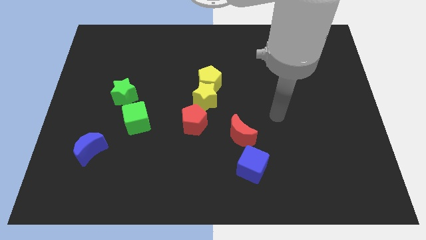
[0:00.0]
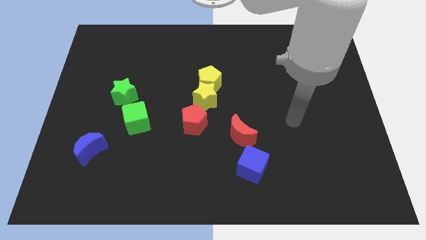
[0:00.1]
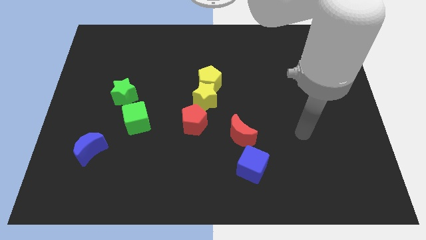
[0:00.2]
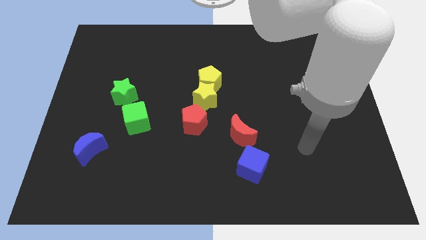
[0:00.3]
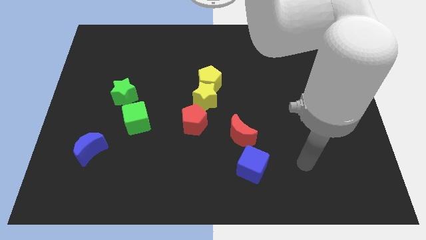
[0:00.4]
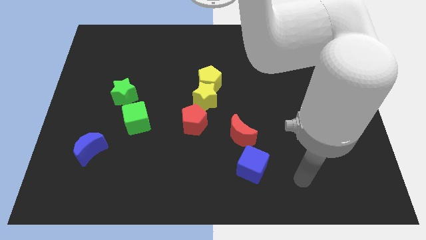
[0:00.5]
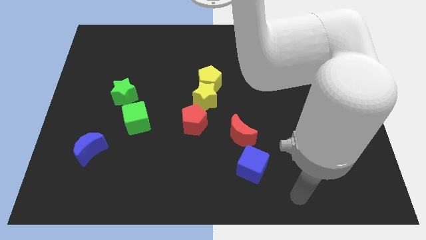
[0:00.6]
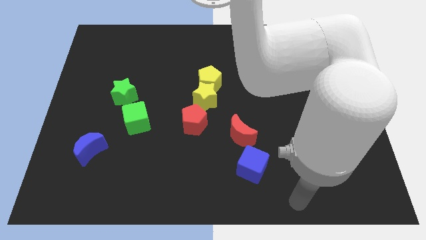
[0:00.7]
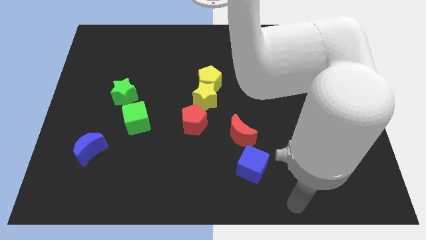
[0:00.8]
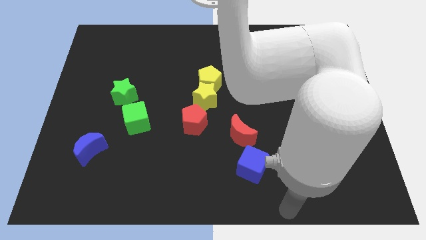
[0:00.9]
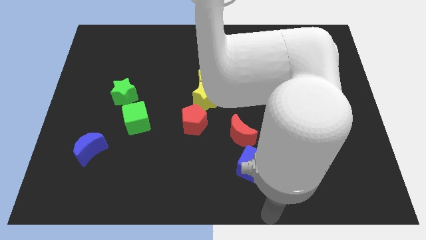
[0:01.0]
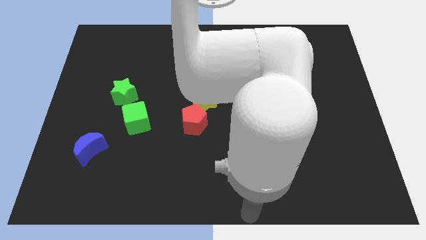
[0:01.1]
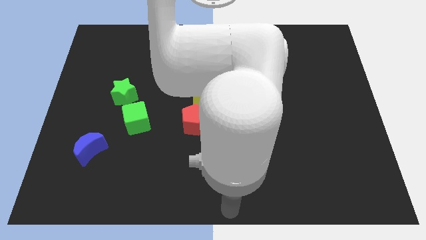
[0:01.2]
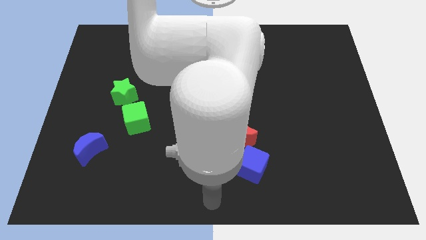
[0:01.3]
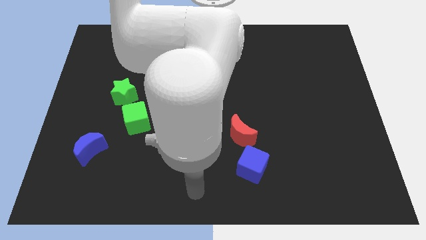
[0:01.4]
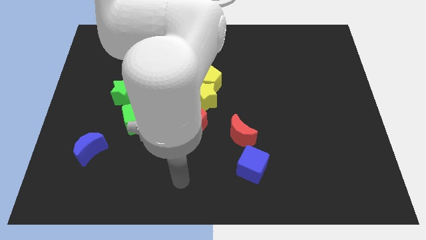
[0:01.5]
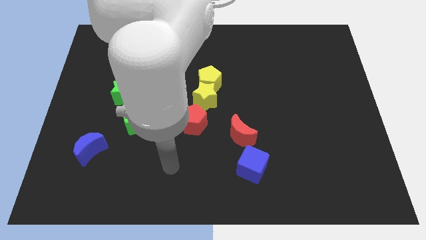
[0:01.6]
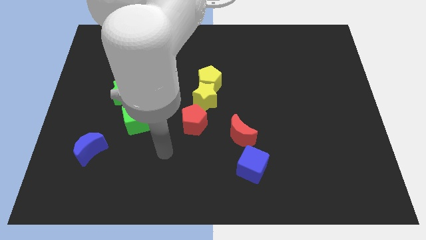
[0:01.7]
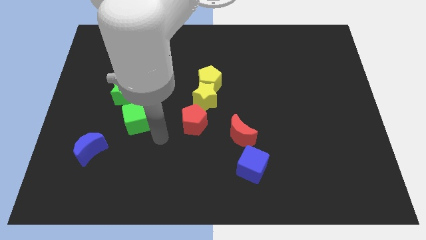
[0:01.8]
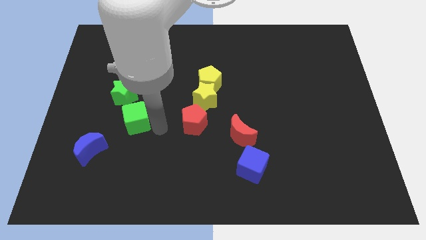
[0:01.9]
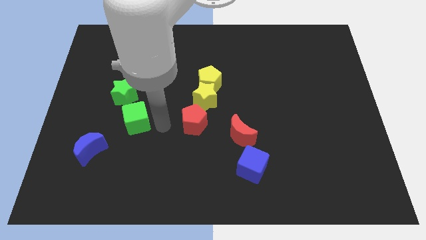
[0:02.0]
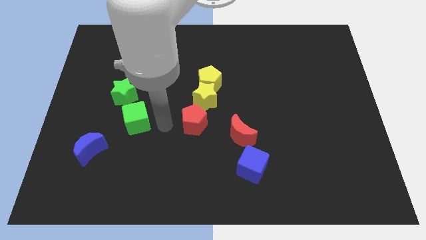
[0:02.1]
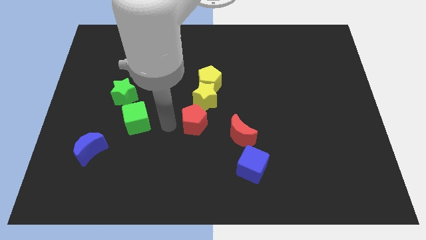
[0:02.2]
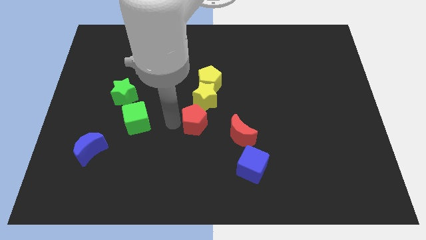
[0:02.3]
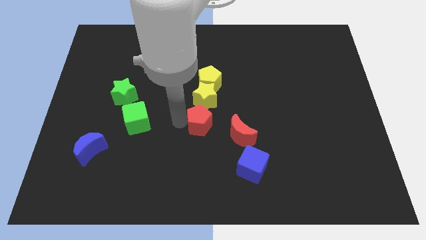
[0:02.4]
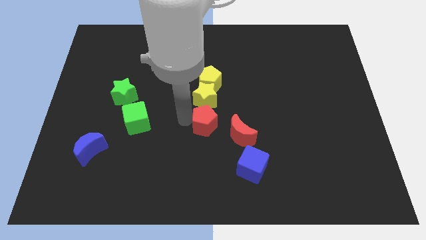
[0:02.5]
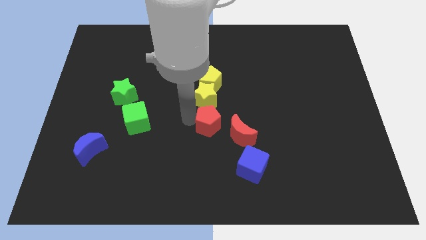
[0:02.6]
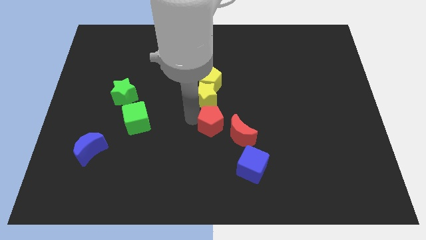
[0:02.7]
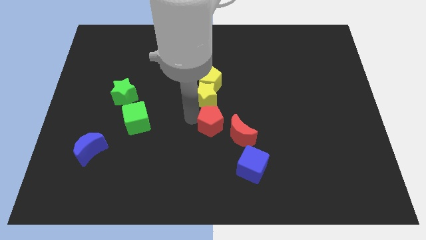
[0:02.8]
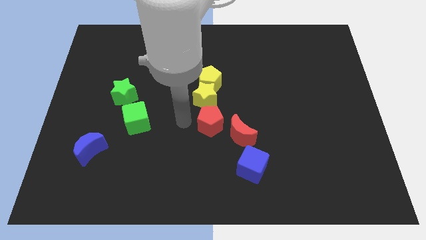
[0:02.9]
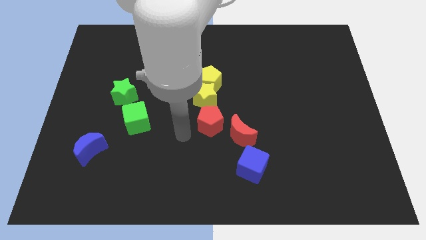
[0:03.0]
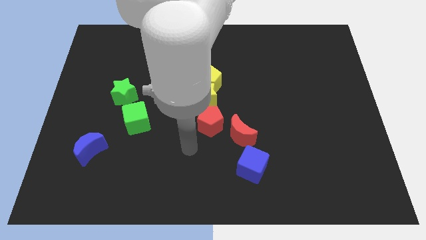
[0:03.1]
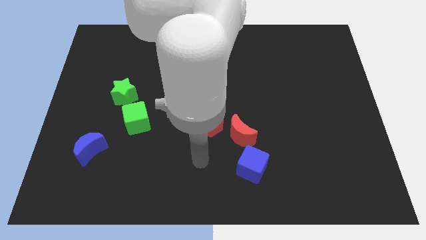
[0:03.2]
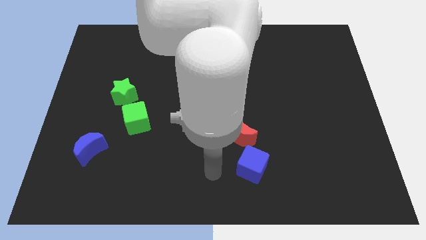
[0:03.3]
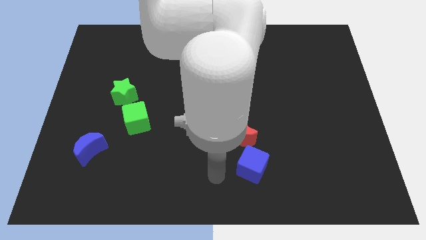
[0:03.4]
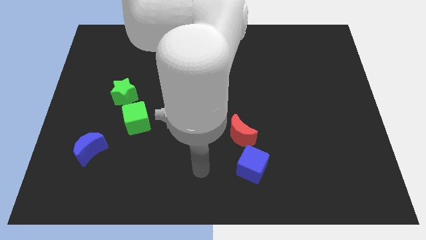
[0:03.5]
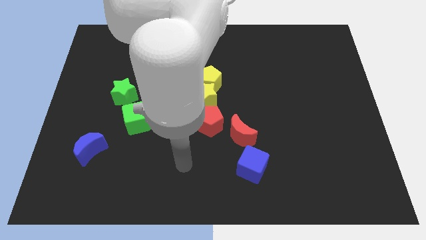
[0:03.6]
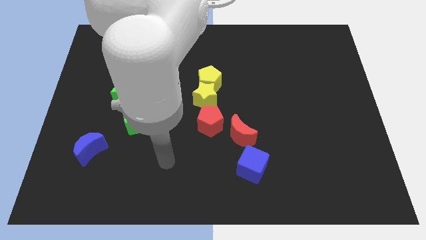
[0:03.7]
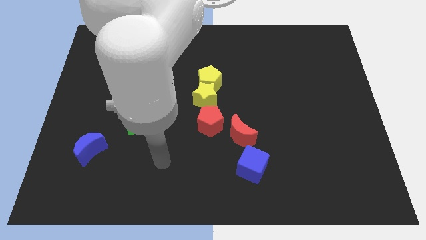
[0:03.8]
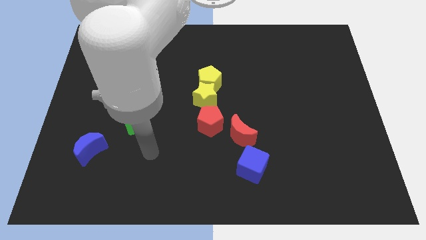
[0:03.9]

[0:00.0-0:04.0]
move the red pentagon to the top left of the red crescent

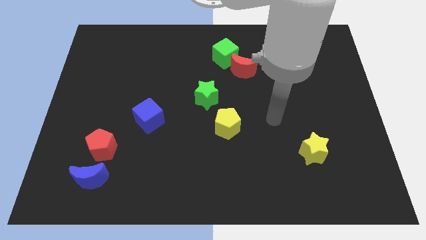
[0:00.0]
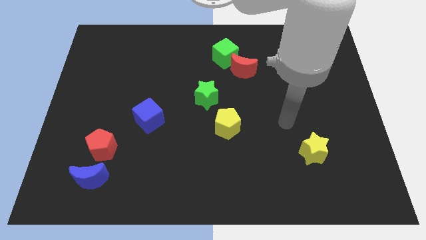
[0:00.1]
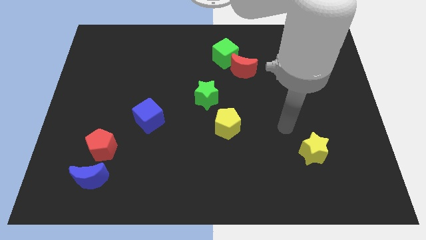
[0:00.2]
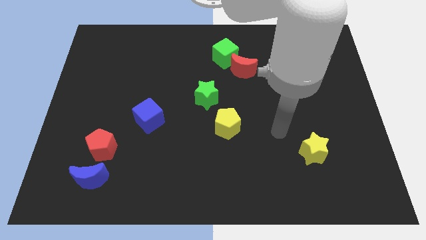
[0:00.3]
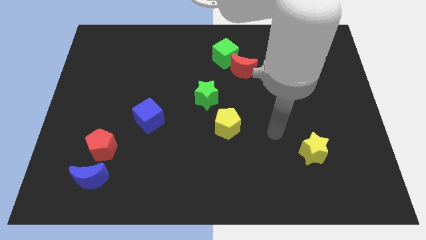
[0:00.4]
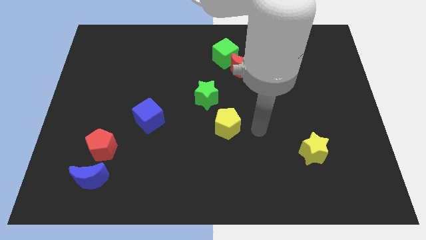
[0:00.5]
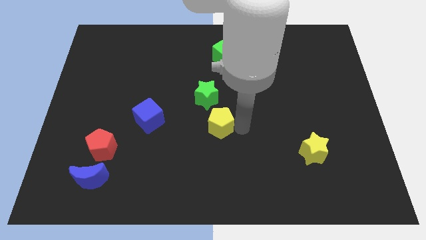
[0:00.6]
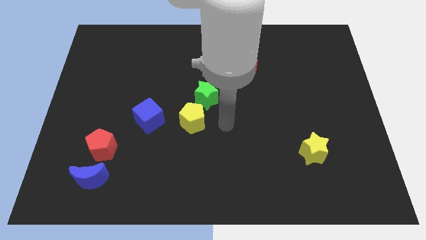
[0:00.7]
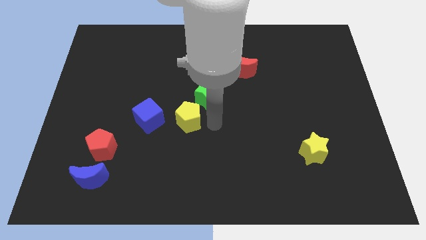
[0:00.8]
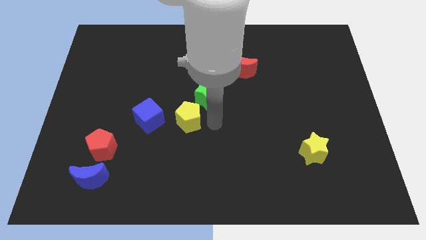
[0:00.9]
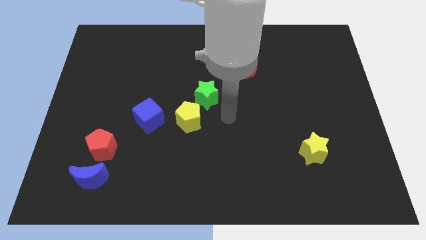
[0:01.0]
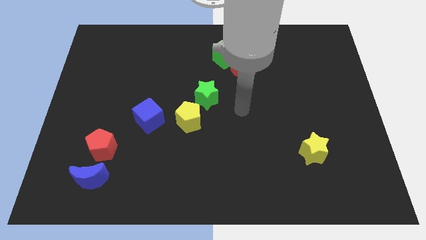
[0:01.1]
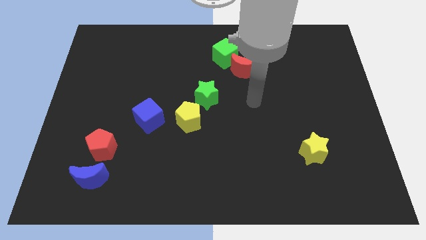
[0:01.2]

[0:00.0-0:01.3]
push the yellow pentagon towards the blue cube

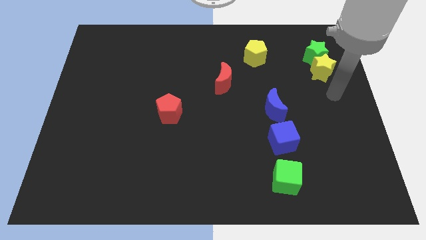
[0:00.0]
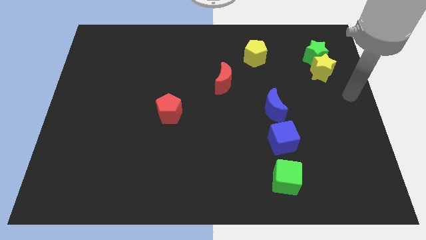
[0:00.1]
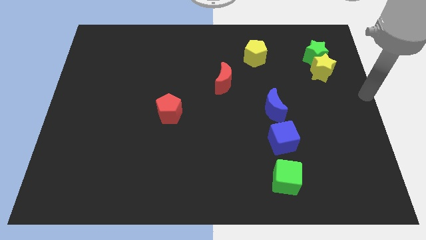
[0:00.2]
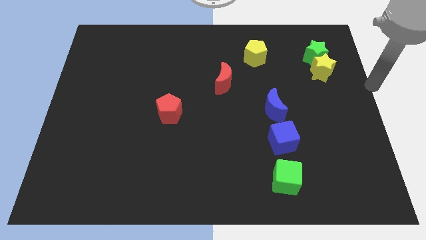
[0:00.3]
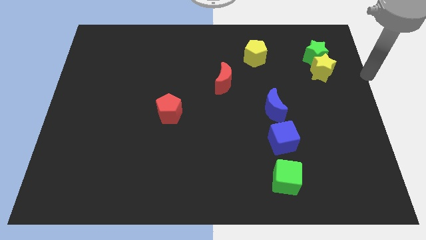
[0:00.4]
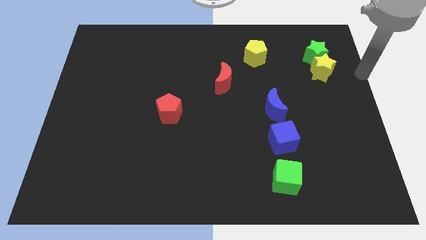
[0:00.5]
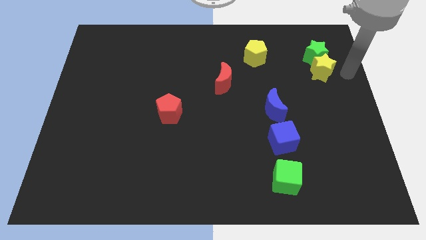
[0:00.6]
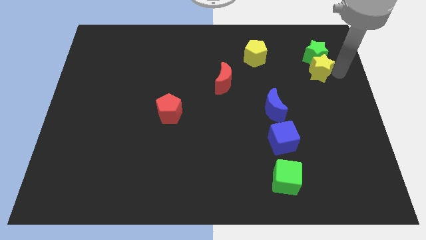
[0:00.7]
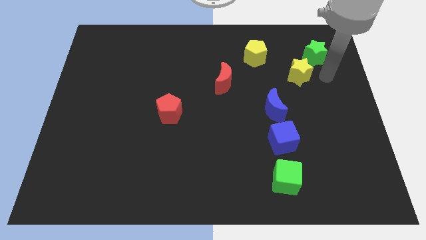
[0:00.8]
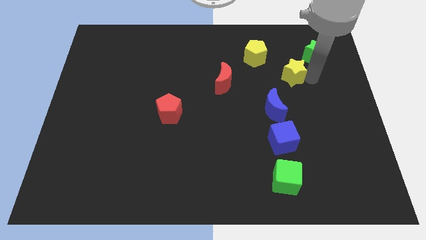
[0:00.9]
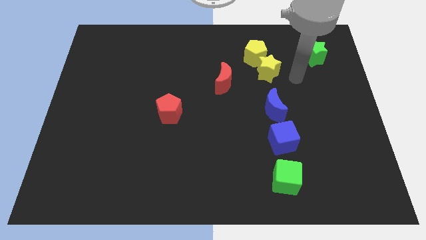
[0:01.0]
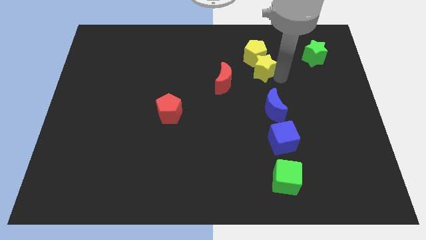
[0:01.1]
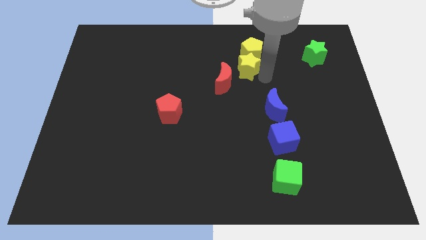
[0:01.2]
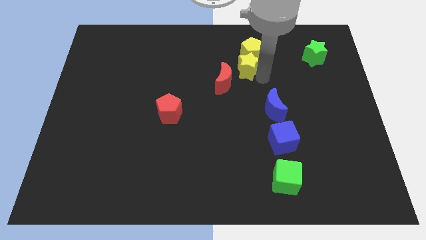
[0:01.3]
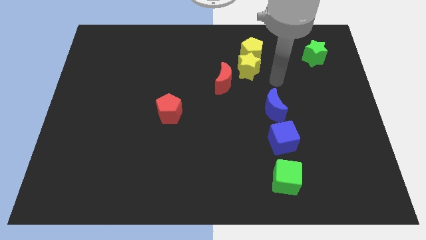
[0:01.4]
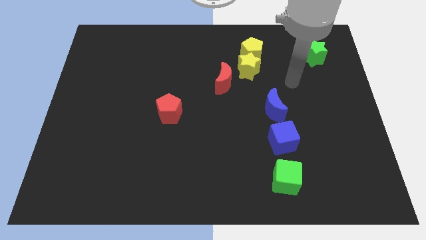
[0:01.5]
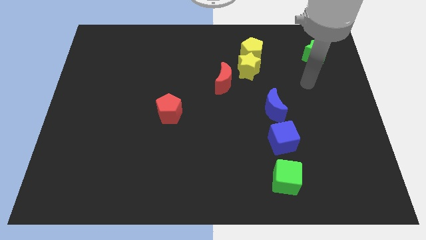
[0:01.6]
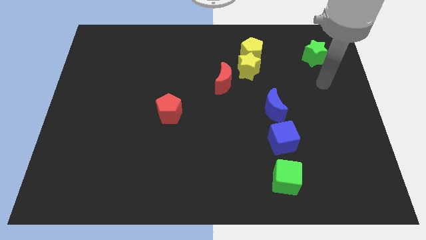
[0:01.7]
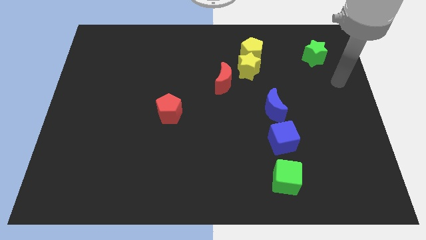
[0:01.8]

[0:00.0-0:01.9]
push the yellow star into yellow pentagon

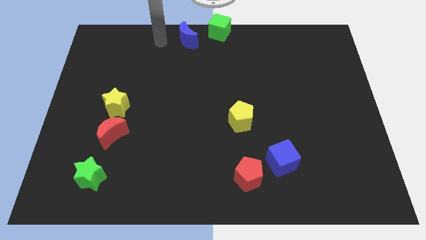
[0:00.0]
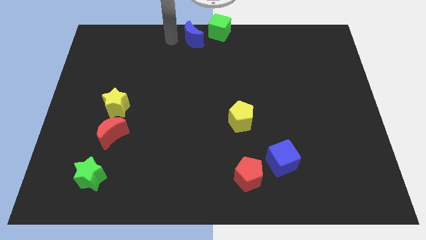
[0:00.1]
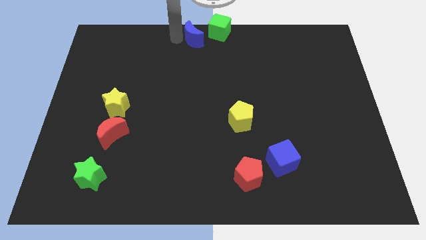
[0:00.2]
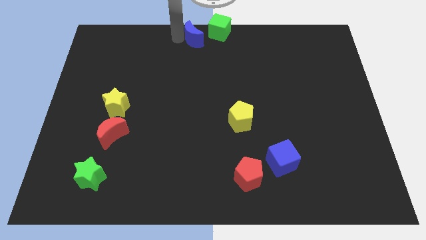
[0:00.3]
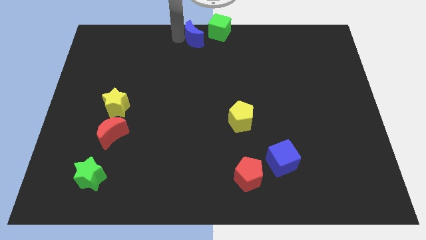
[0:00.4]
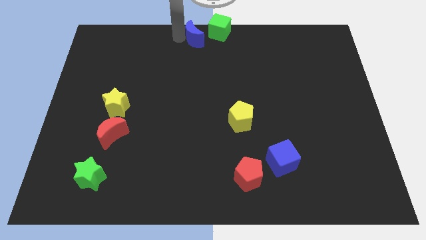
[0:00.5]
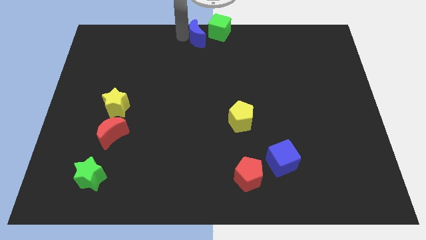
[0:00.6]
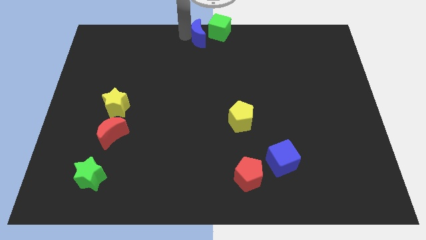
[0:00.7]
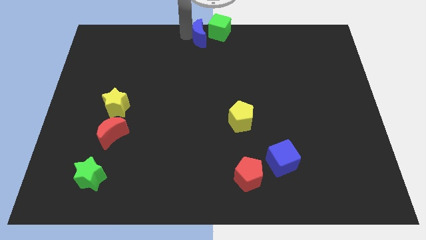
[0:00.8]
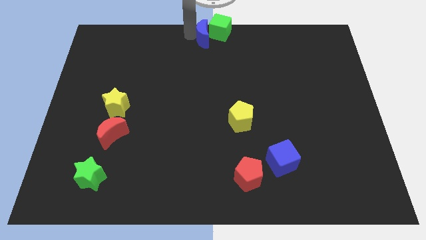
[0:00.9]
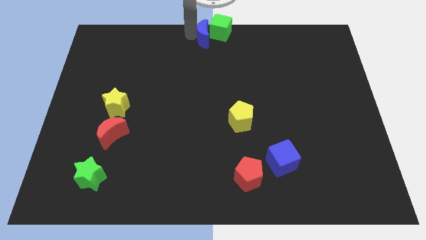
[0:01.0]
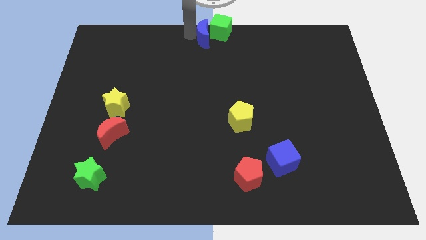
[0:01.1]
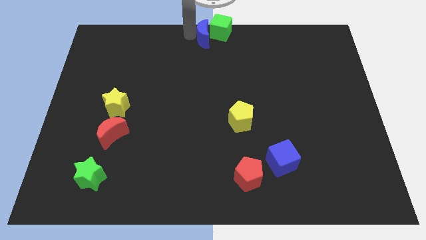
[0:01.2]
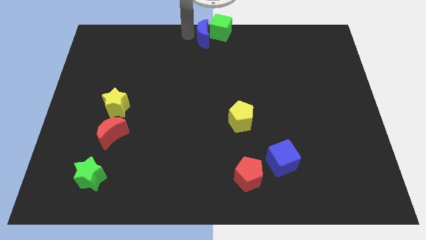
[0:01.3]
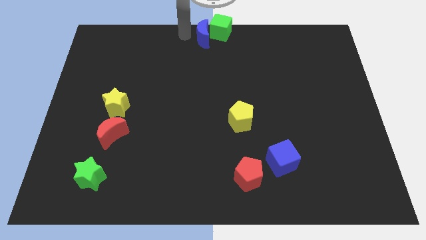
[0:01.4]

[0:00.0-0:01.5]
push the blue crescent into the green cube

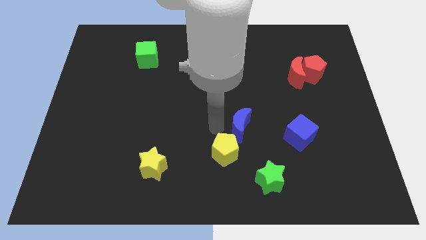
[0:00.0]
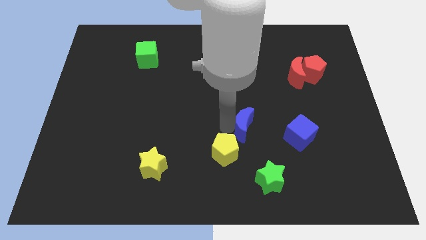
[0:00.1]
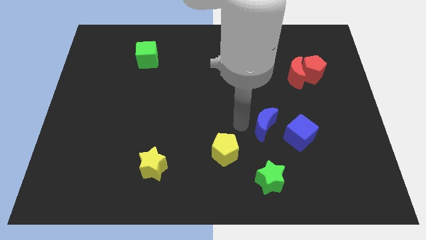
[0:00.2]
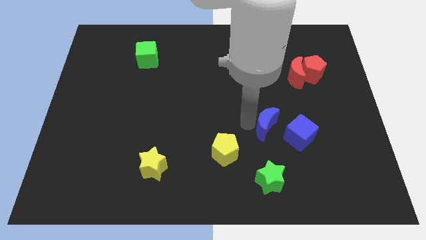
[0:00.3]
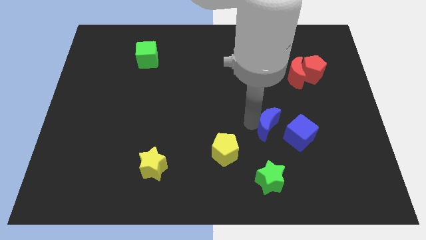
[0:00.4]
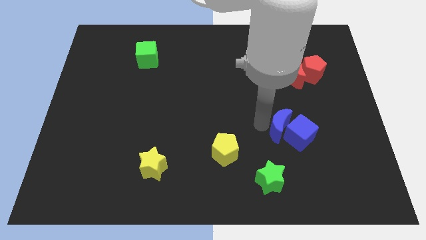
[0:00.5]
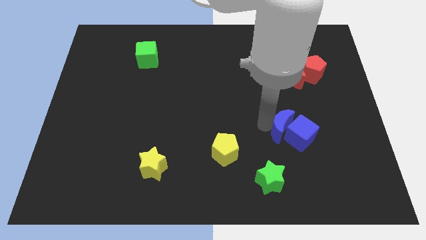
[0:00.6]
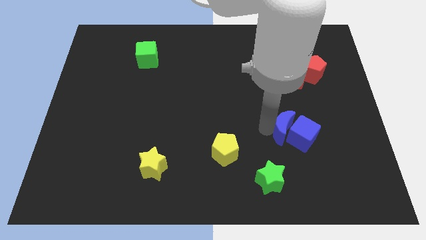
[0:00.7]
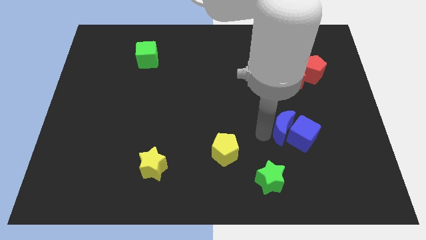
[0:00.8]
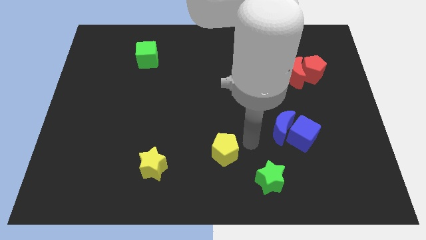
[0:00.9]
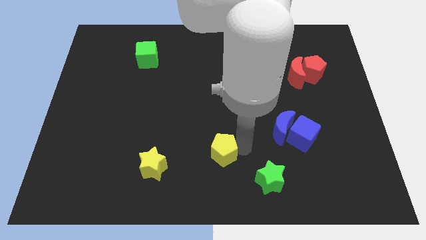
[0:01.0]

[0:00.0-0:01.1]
push the blue moon into the blue cube
